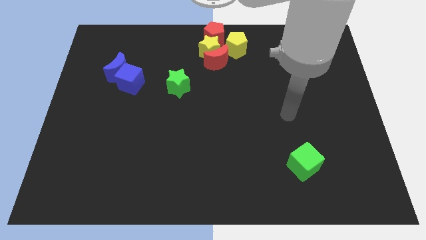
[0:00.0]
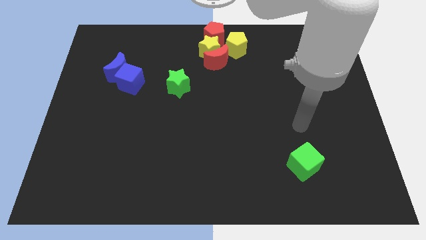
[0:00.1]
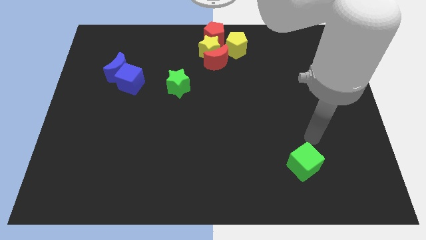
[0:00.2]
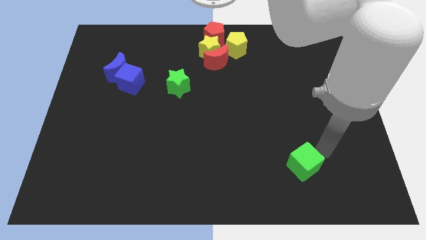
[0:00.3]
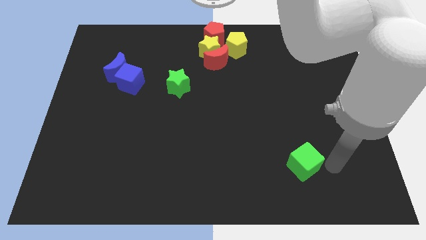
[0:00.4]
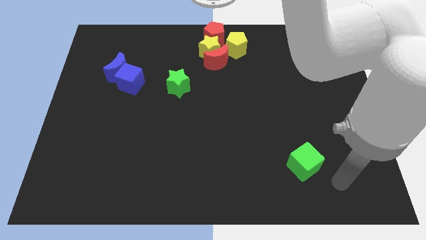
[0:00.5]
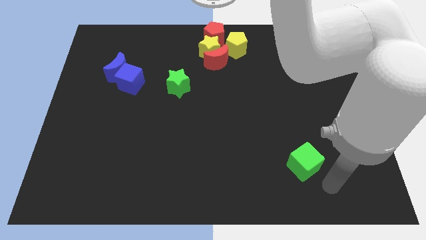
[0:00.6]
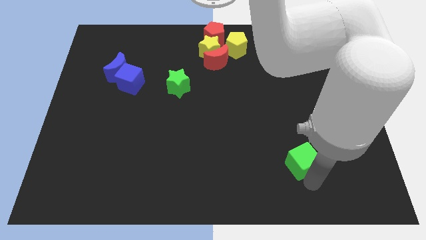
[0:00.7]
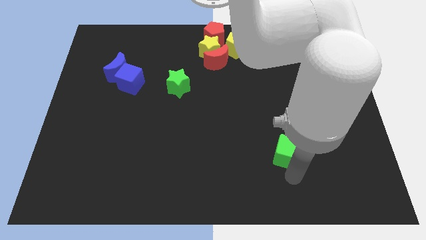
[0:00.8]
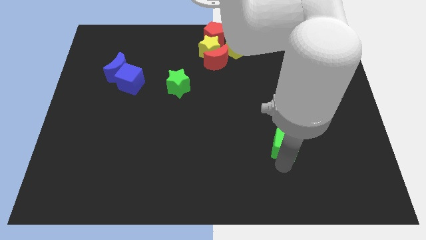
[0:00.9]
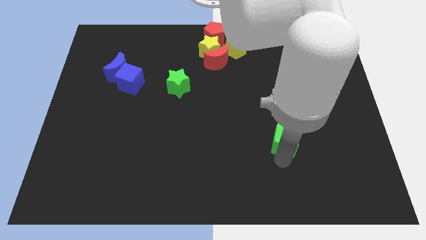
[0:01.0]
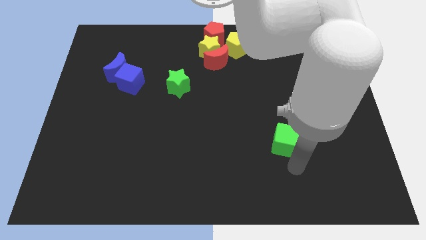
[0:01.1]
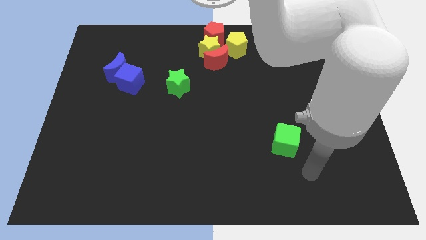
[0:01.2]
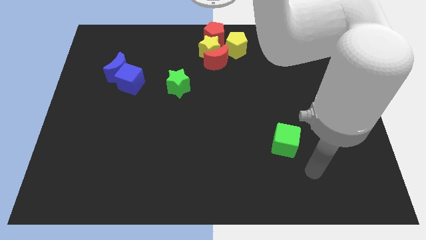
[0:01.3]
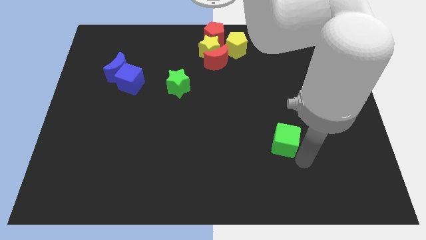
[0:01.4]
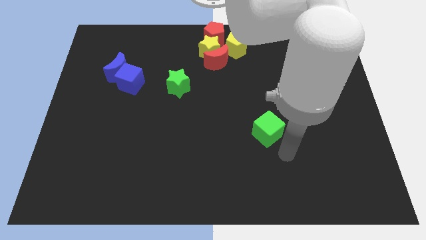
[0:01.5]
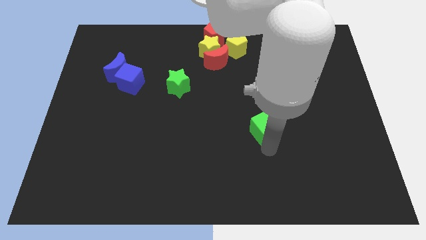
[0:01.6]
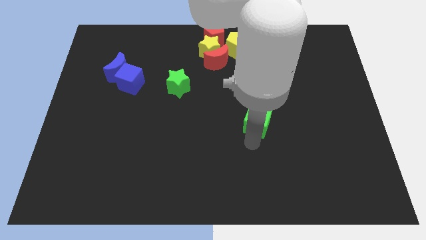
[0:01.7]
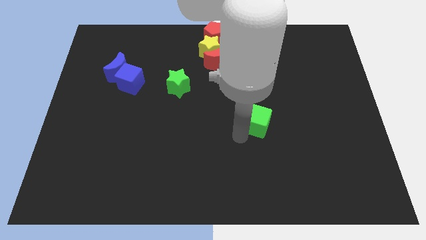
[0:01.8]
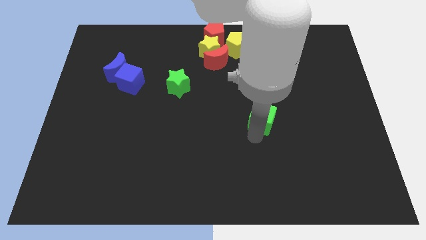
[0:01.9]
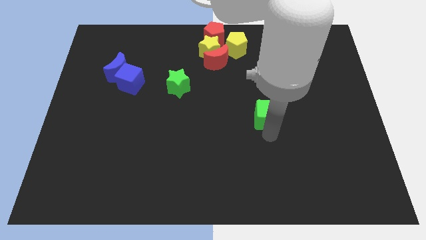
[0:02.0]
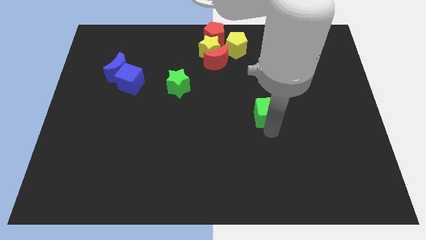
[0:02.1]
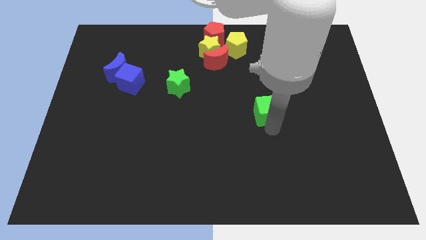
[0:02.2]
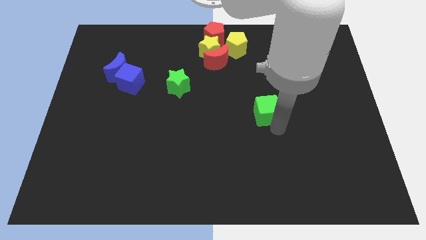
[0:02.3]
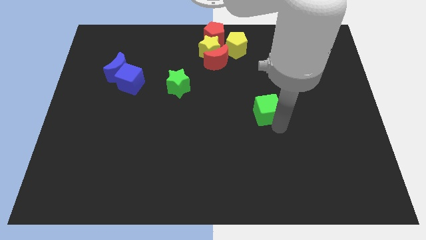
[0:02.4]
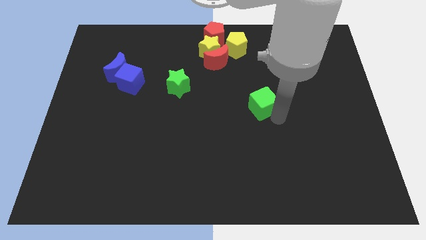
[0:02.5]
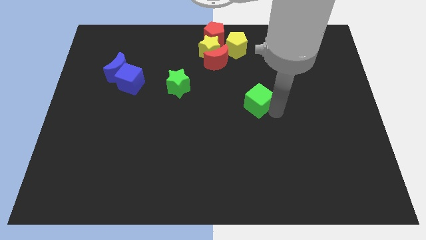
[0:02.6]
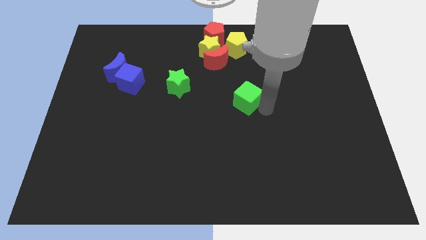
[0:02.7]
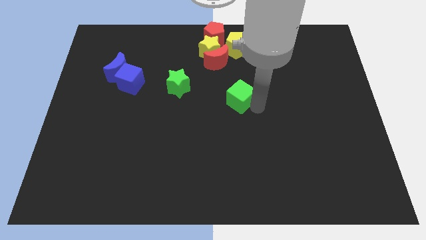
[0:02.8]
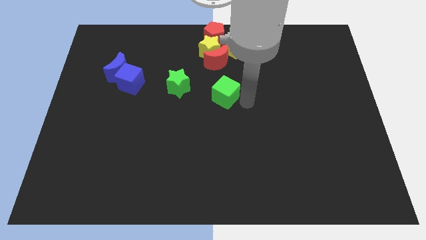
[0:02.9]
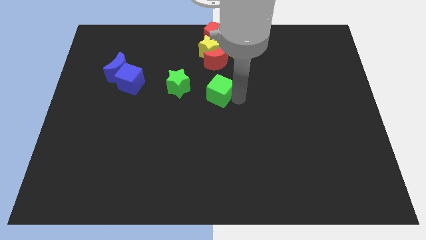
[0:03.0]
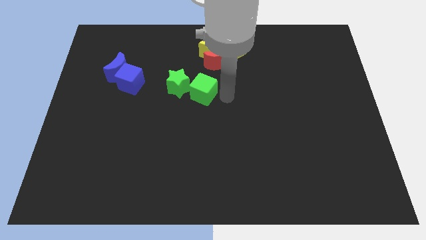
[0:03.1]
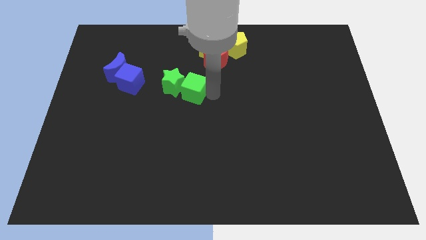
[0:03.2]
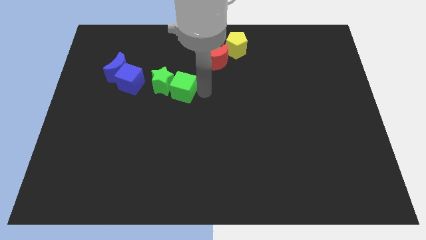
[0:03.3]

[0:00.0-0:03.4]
slide the green cube into the green star

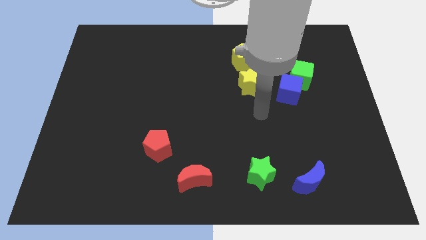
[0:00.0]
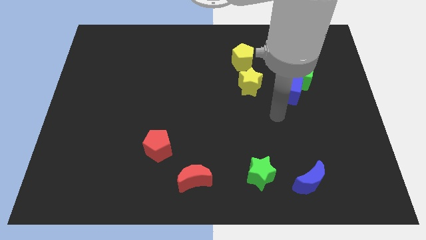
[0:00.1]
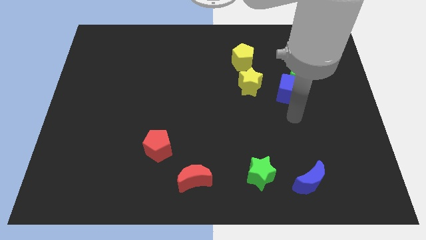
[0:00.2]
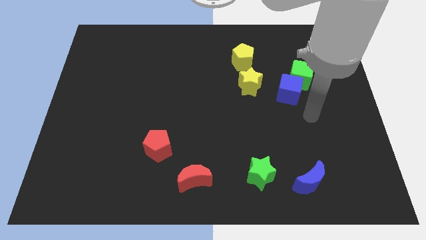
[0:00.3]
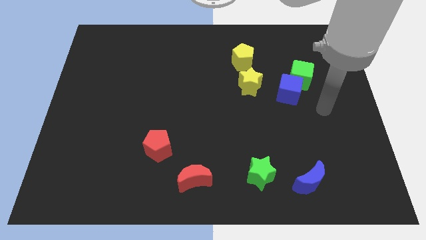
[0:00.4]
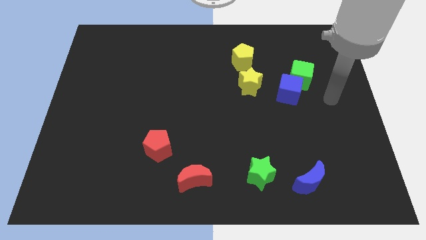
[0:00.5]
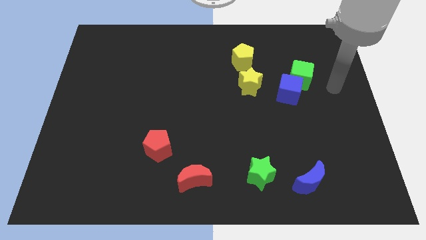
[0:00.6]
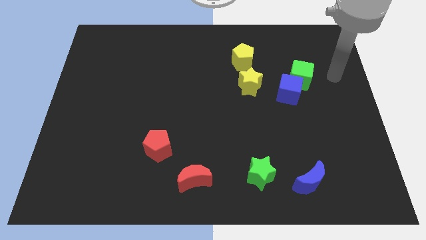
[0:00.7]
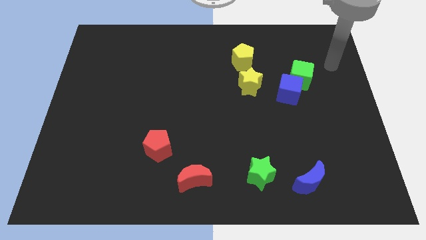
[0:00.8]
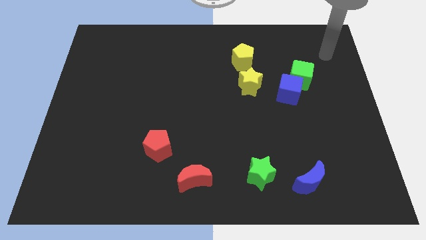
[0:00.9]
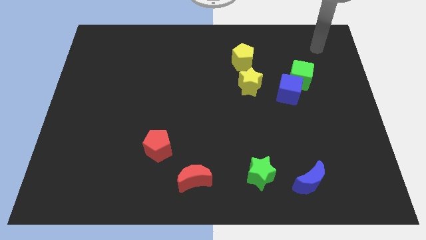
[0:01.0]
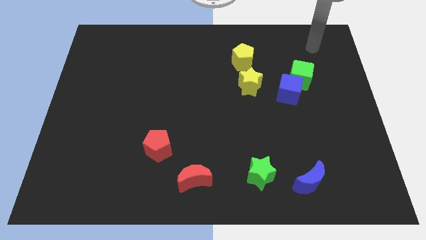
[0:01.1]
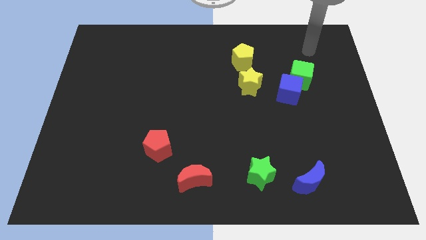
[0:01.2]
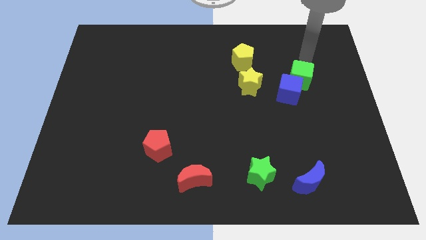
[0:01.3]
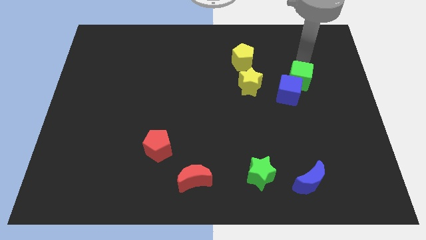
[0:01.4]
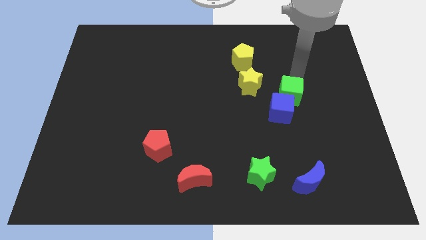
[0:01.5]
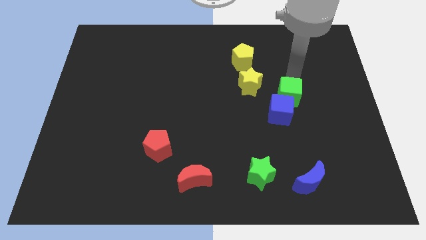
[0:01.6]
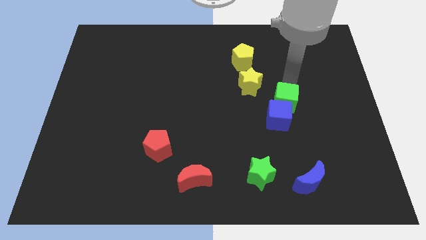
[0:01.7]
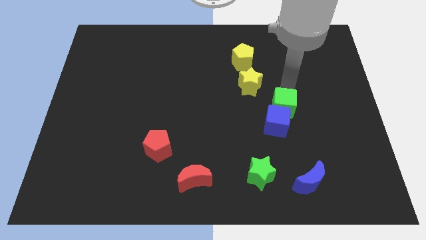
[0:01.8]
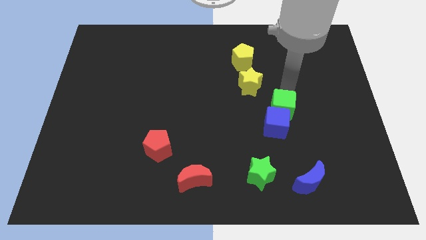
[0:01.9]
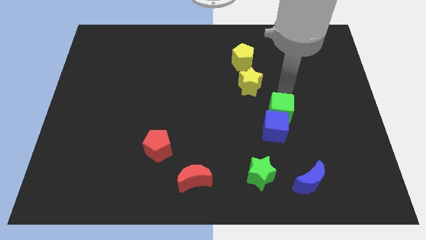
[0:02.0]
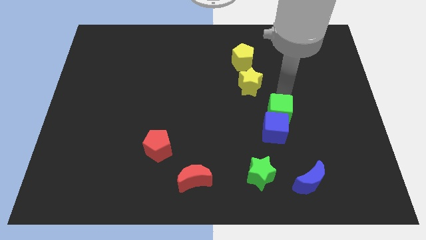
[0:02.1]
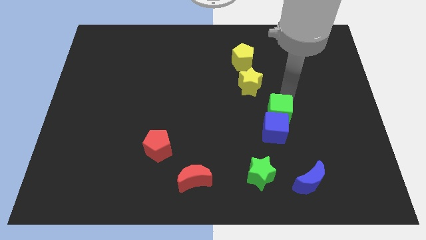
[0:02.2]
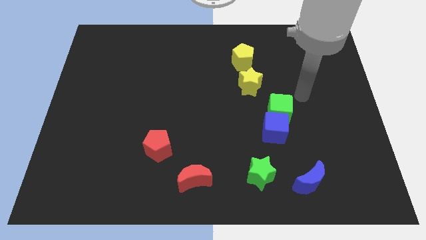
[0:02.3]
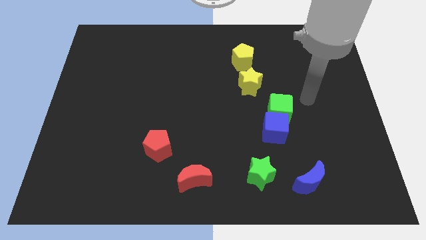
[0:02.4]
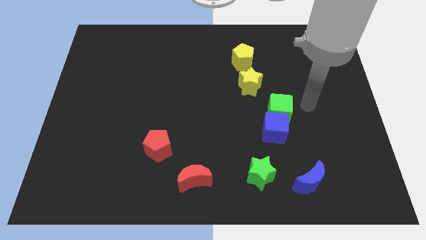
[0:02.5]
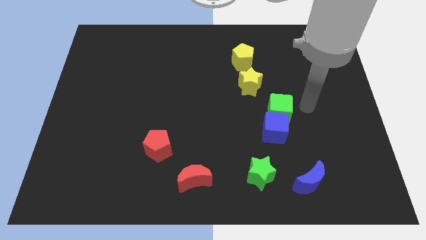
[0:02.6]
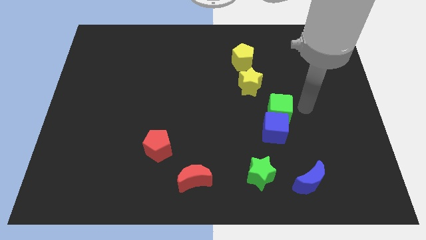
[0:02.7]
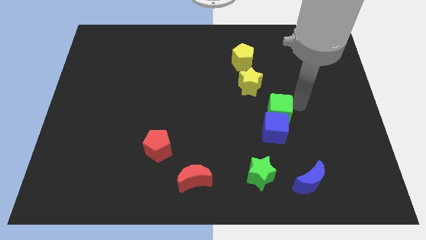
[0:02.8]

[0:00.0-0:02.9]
push the green and blue cubes together to the bottom side of the board

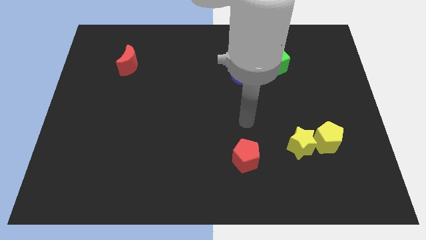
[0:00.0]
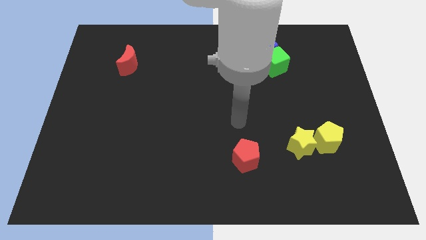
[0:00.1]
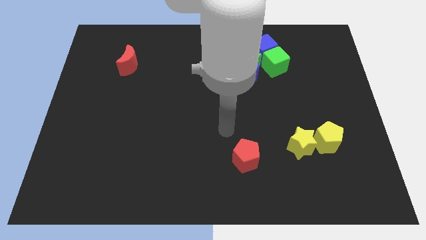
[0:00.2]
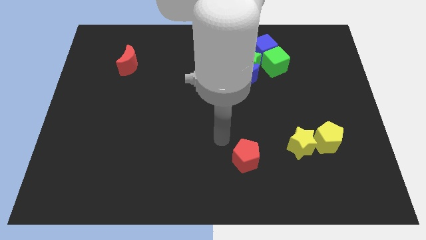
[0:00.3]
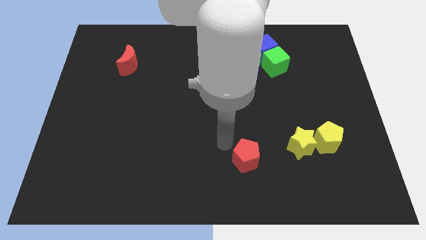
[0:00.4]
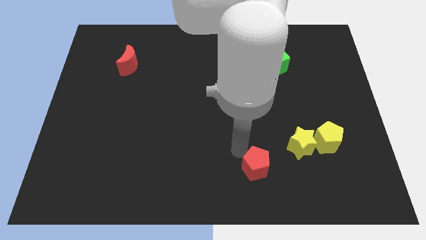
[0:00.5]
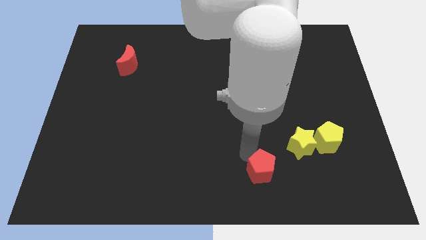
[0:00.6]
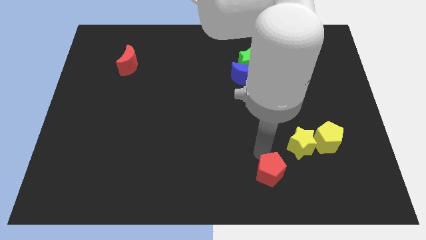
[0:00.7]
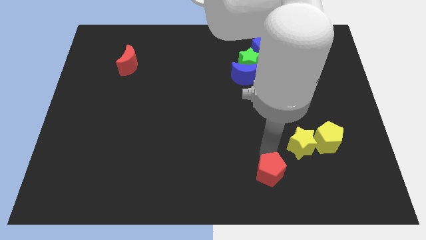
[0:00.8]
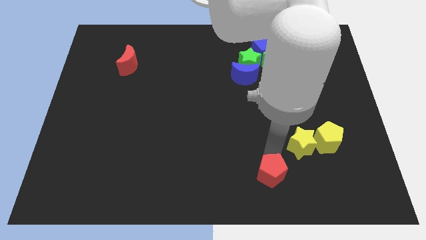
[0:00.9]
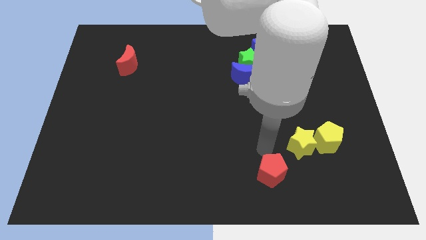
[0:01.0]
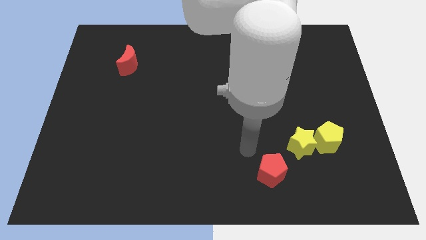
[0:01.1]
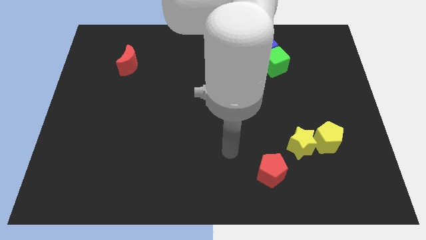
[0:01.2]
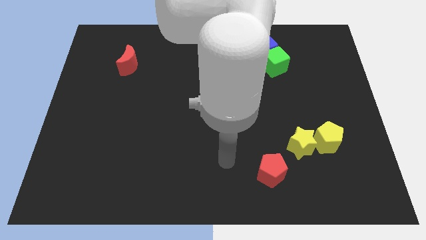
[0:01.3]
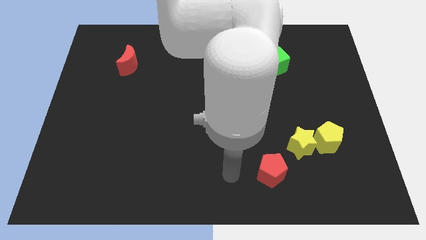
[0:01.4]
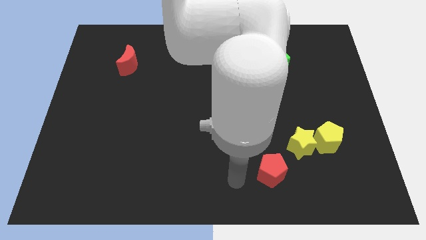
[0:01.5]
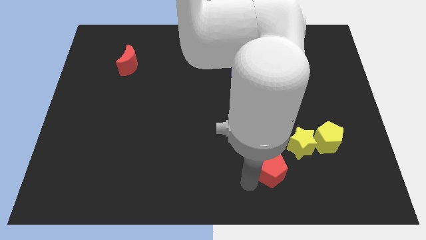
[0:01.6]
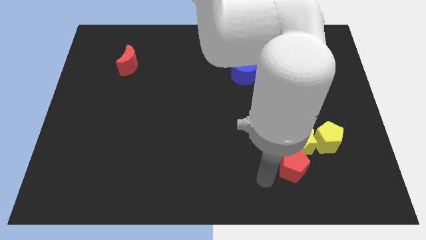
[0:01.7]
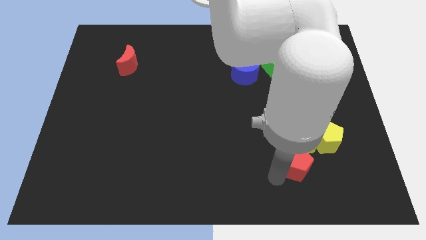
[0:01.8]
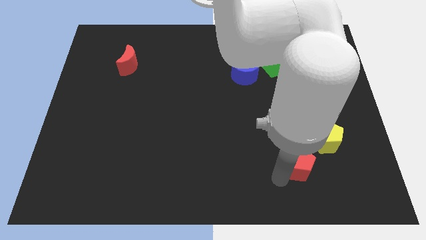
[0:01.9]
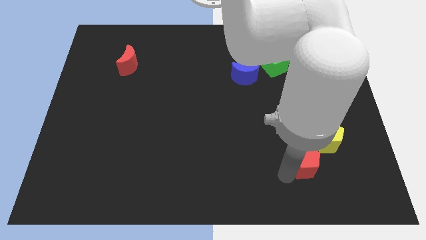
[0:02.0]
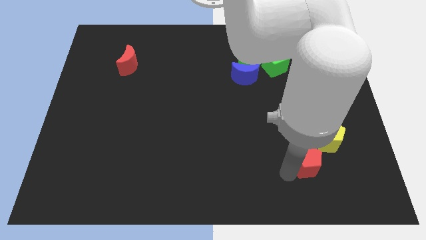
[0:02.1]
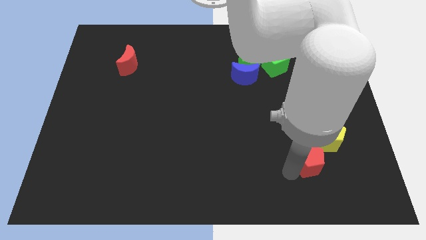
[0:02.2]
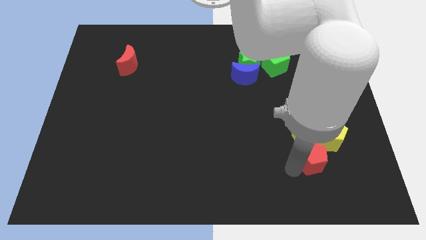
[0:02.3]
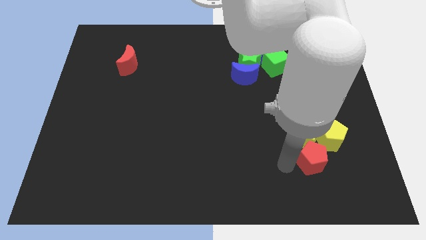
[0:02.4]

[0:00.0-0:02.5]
move red pentagon into yellow blocks
